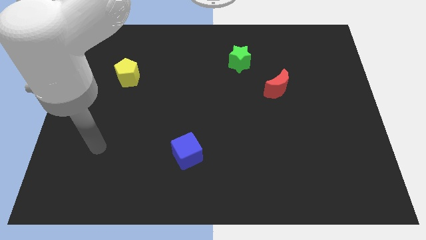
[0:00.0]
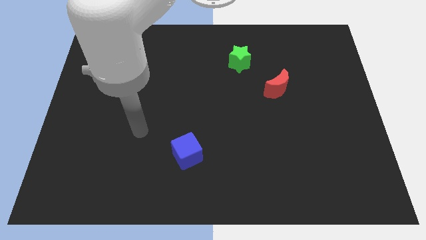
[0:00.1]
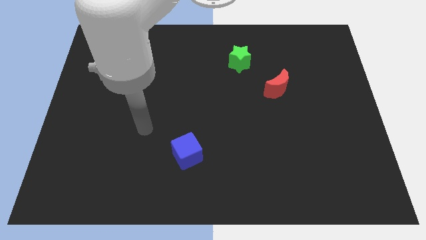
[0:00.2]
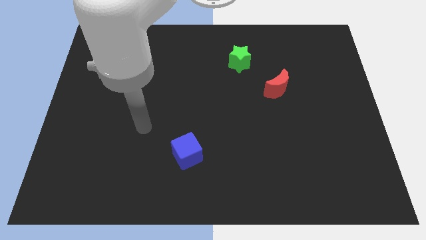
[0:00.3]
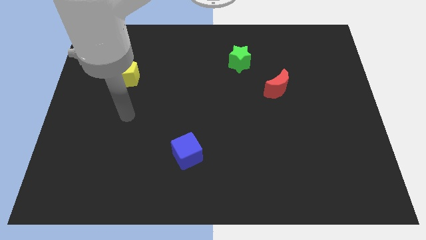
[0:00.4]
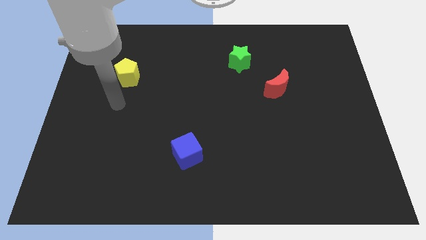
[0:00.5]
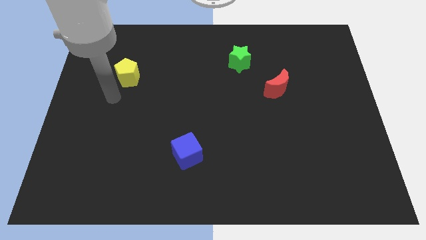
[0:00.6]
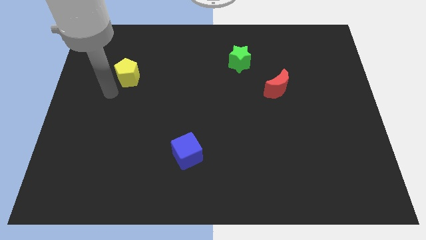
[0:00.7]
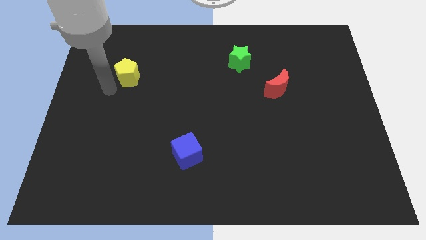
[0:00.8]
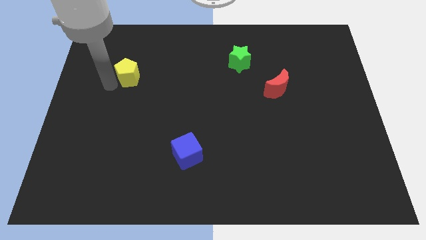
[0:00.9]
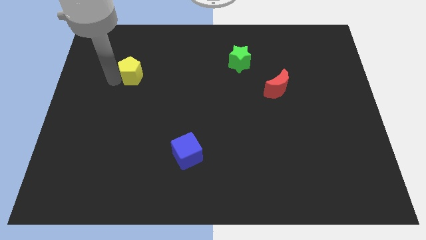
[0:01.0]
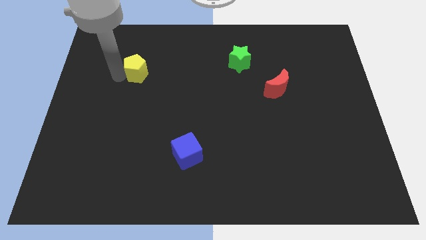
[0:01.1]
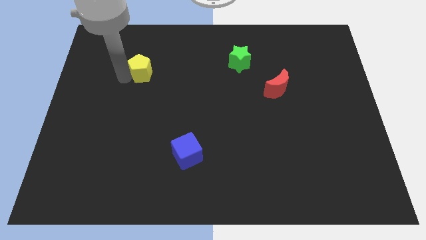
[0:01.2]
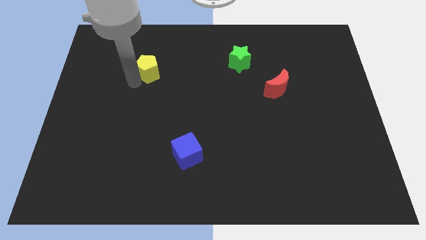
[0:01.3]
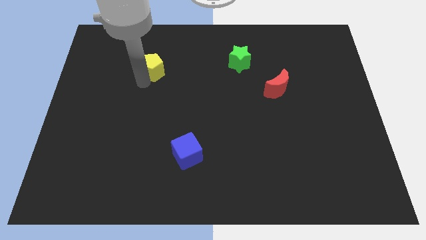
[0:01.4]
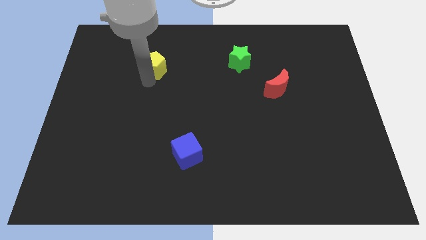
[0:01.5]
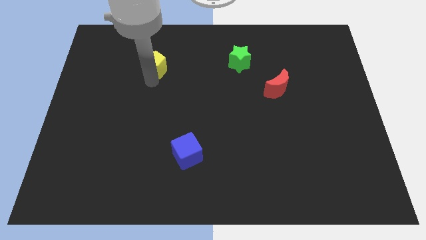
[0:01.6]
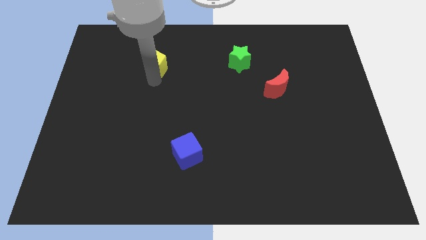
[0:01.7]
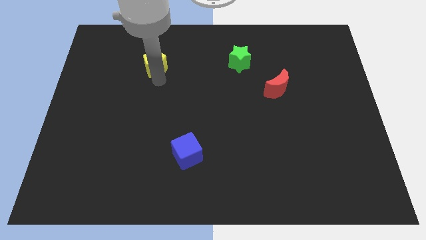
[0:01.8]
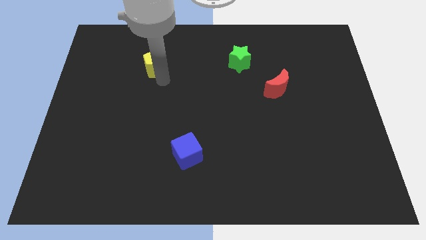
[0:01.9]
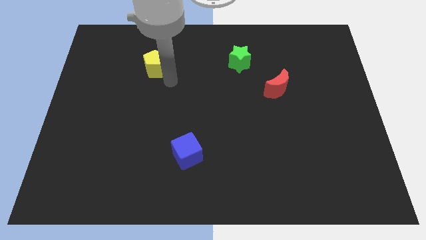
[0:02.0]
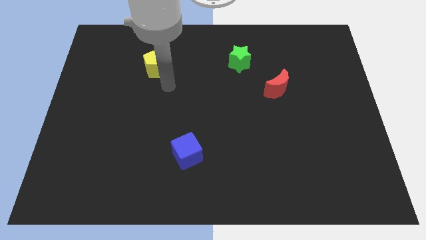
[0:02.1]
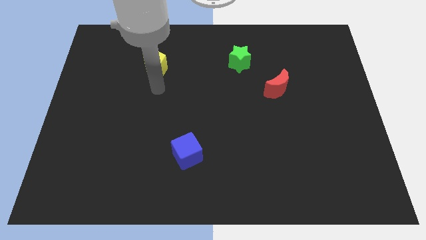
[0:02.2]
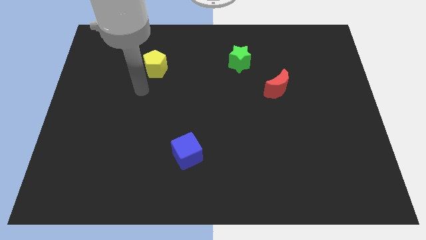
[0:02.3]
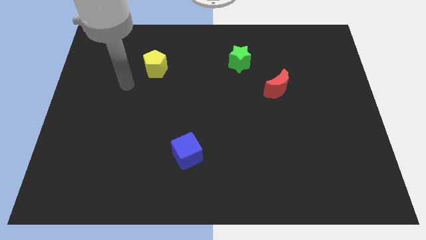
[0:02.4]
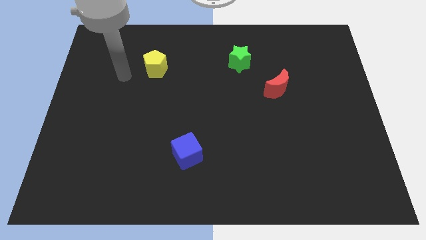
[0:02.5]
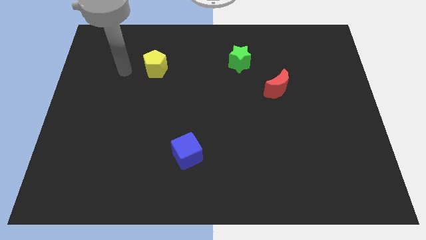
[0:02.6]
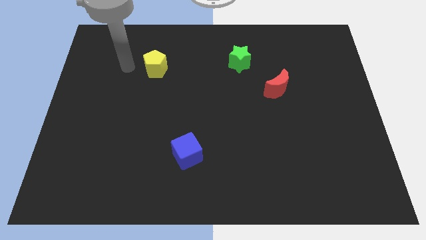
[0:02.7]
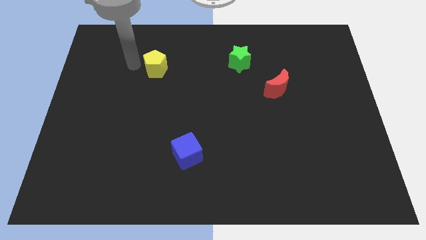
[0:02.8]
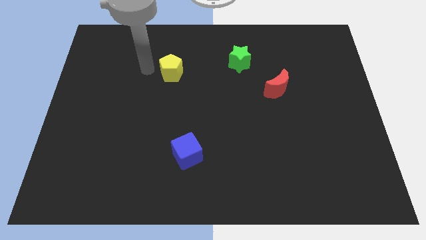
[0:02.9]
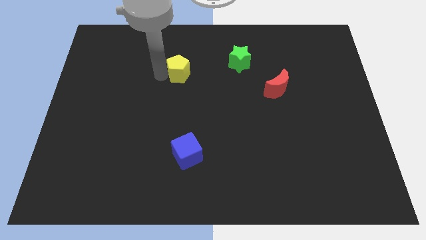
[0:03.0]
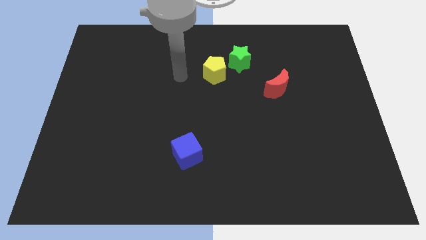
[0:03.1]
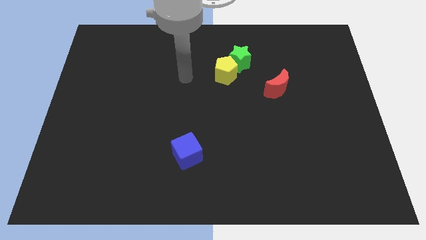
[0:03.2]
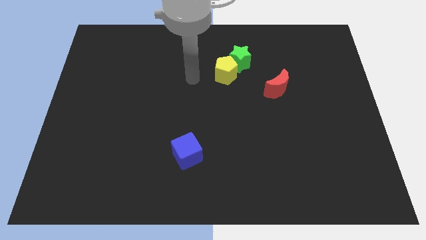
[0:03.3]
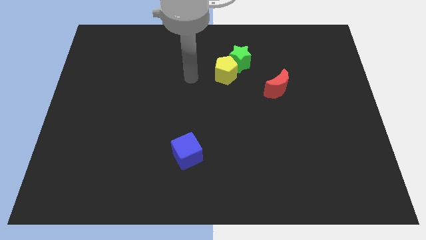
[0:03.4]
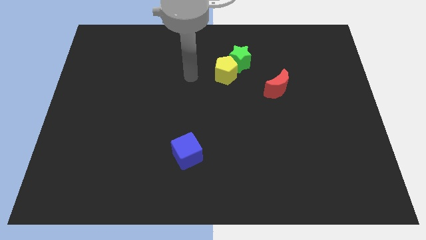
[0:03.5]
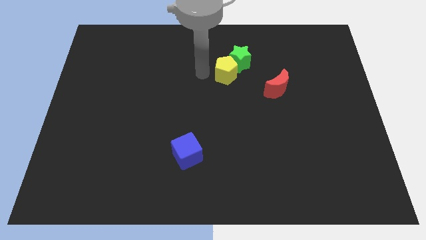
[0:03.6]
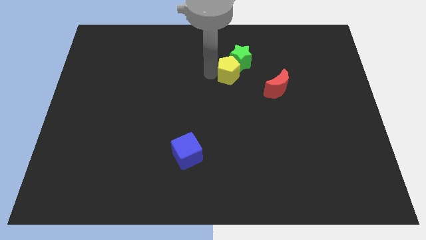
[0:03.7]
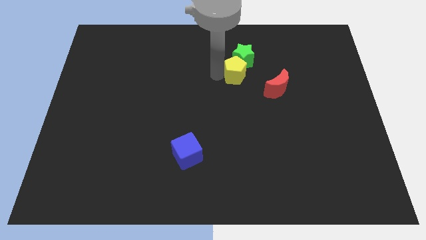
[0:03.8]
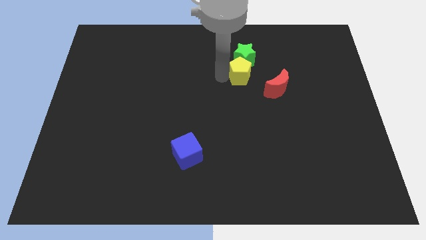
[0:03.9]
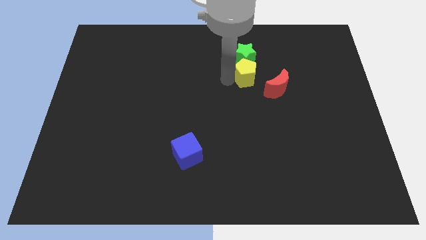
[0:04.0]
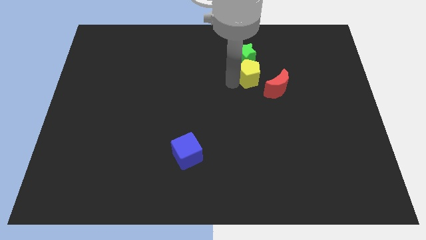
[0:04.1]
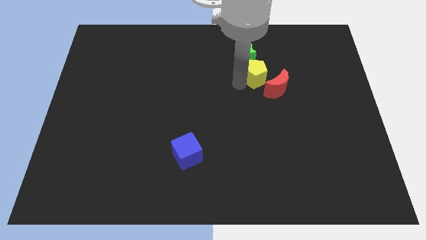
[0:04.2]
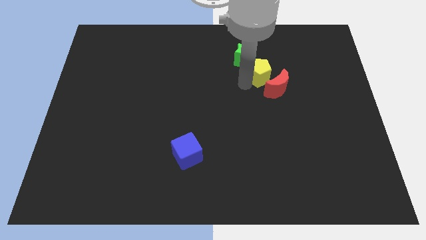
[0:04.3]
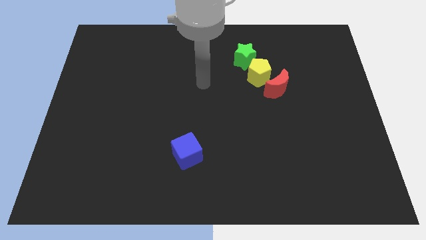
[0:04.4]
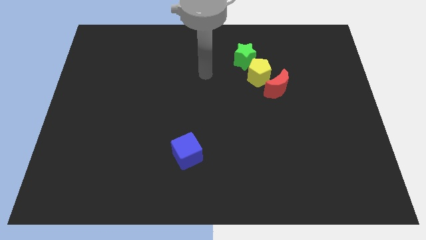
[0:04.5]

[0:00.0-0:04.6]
slide the yellow block to the moon

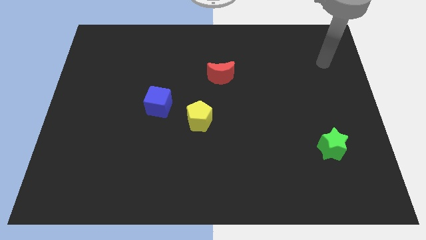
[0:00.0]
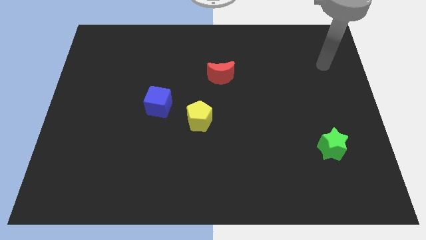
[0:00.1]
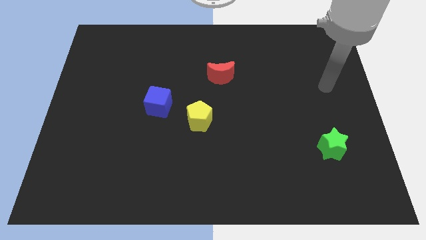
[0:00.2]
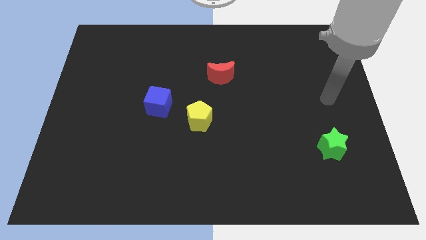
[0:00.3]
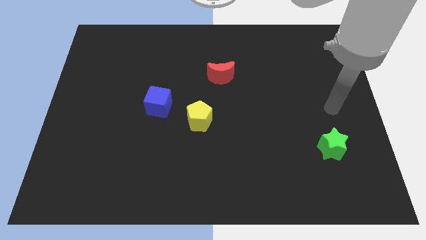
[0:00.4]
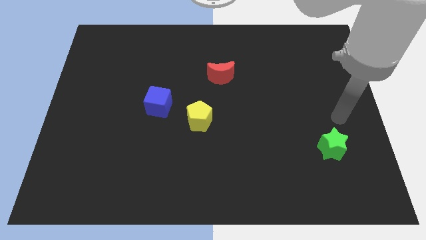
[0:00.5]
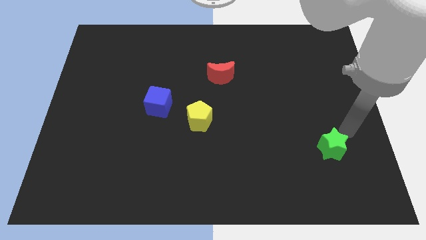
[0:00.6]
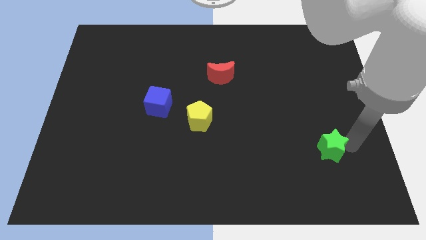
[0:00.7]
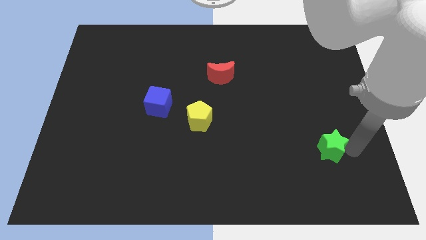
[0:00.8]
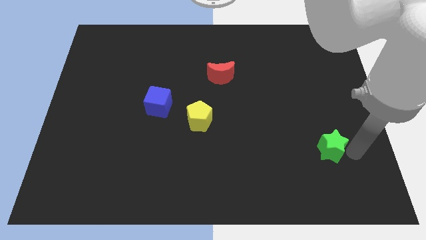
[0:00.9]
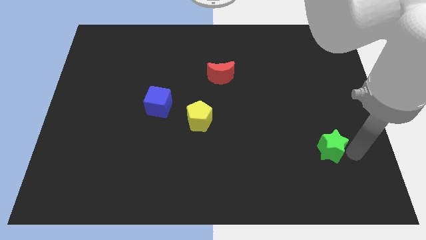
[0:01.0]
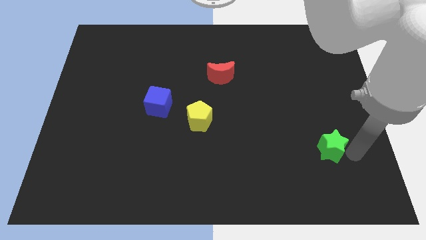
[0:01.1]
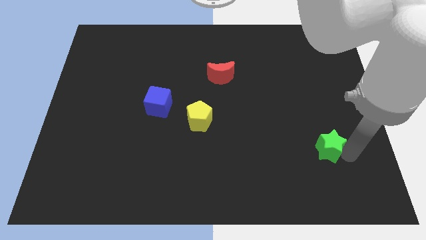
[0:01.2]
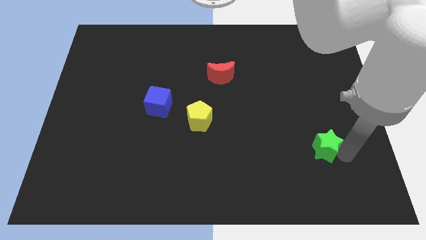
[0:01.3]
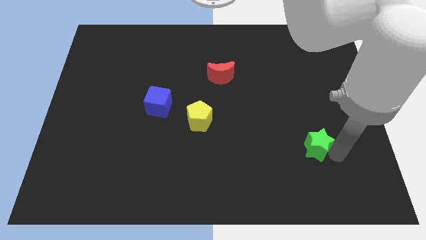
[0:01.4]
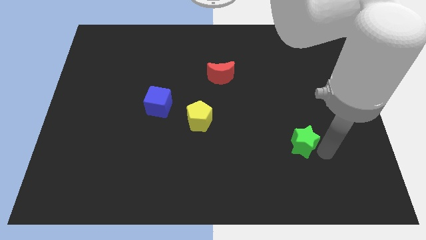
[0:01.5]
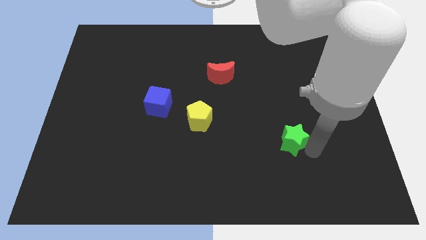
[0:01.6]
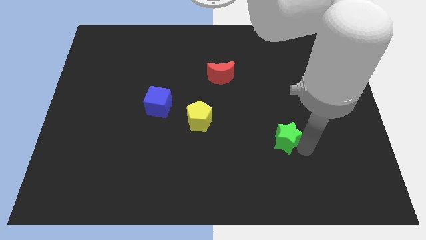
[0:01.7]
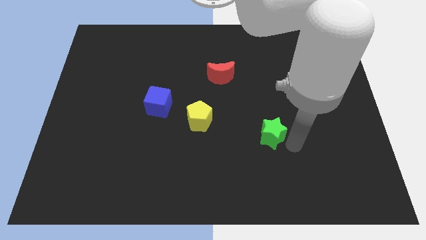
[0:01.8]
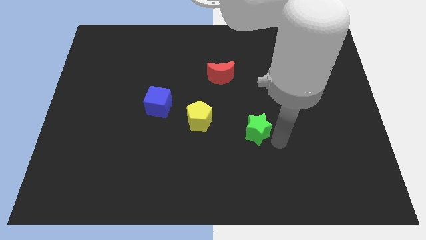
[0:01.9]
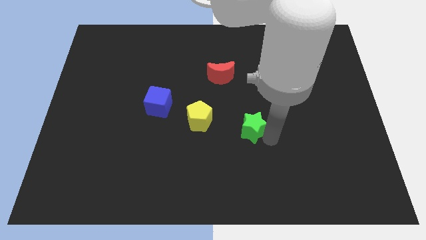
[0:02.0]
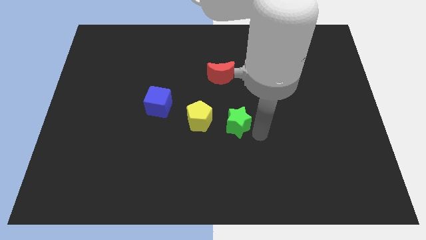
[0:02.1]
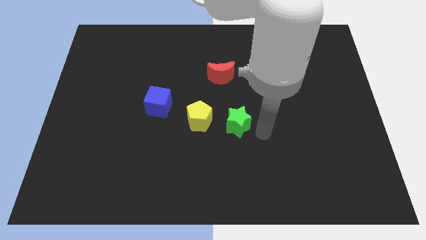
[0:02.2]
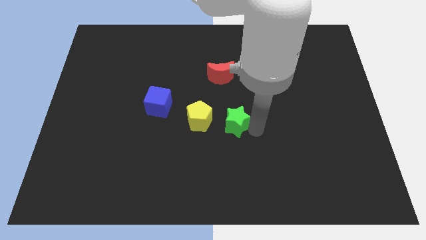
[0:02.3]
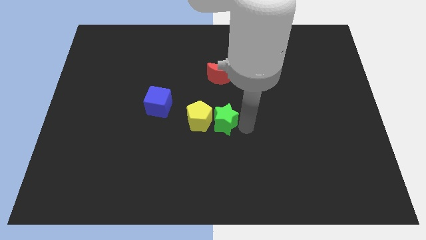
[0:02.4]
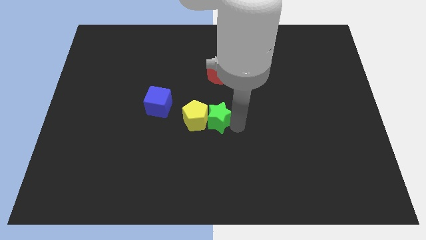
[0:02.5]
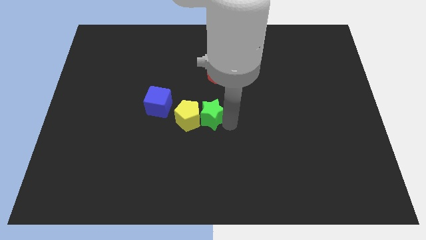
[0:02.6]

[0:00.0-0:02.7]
move the green star next to the yellow block

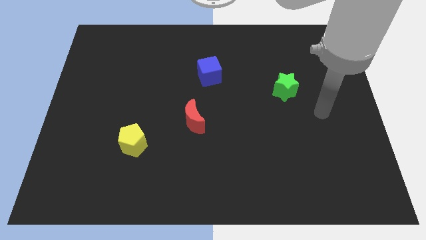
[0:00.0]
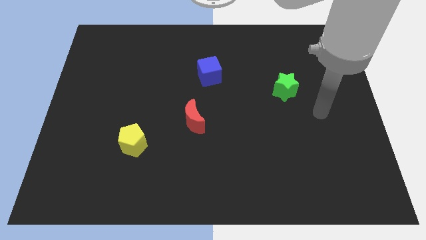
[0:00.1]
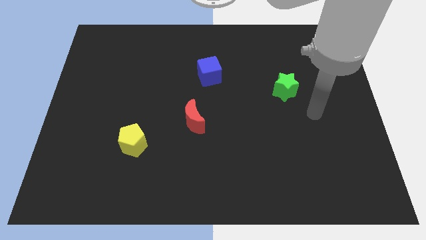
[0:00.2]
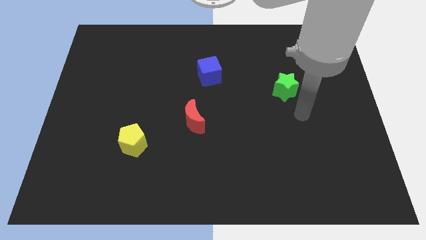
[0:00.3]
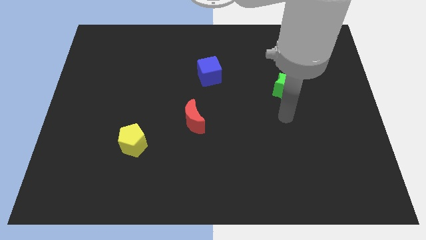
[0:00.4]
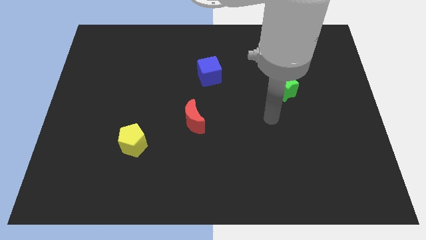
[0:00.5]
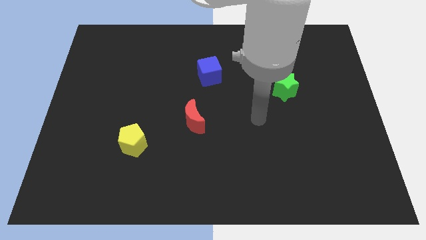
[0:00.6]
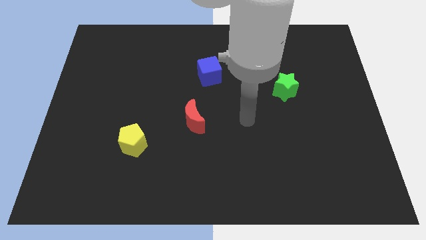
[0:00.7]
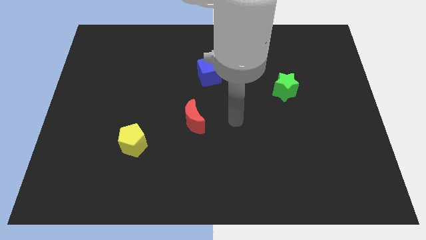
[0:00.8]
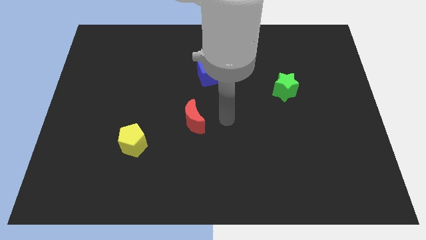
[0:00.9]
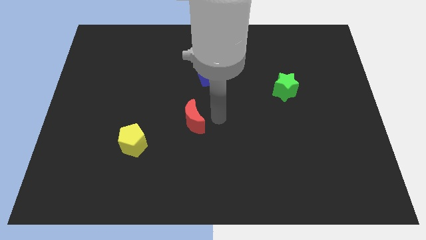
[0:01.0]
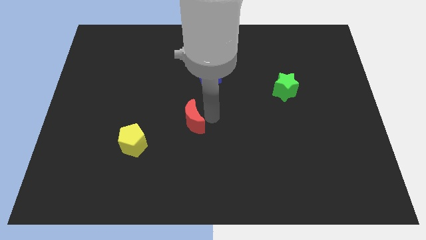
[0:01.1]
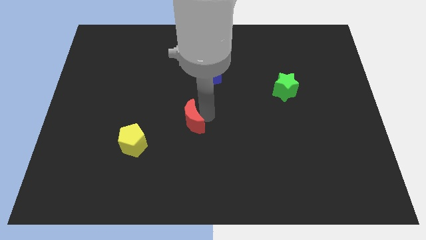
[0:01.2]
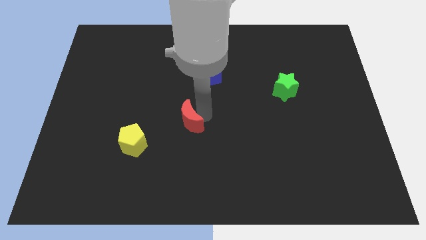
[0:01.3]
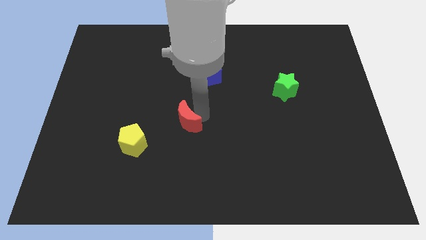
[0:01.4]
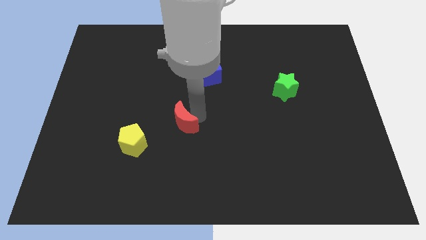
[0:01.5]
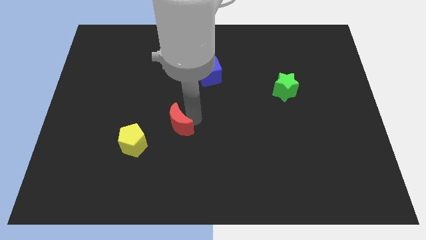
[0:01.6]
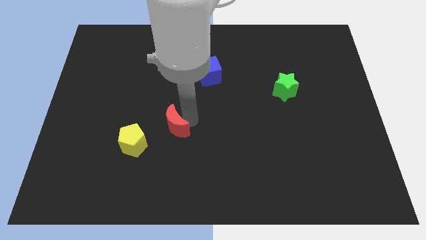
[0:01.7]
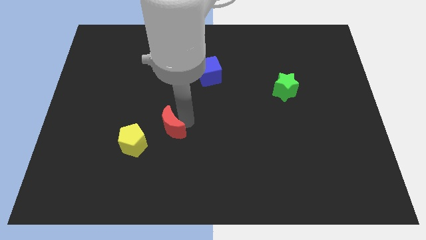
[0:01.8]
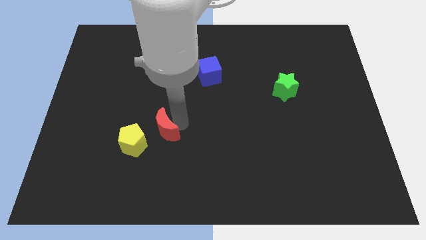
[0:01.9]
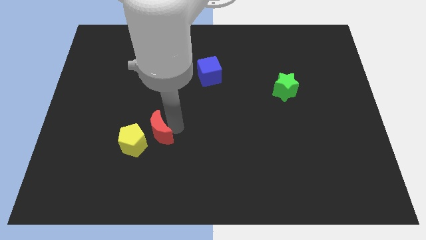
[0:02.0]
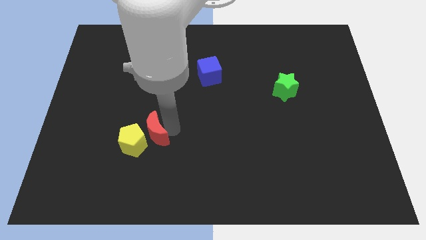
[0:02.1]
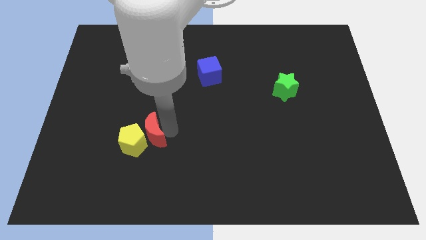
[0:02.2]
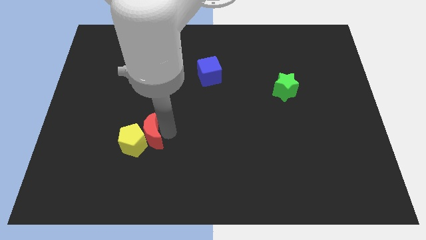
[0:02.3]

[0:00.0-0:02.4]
move the red moon close to the yellow block
